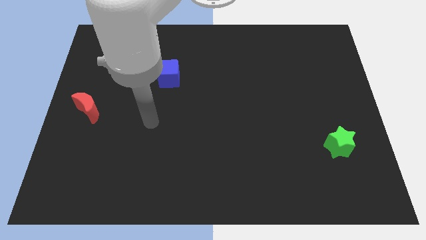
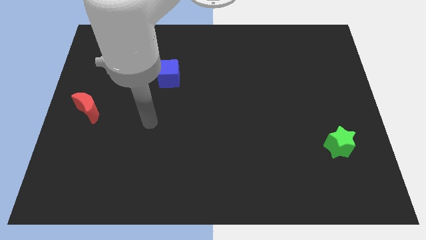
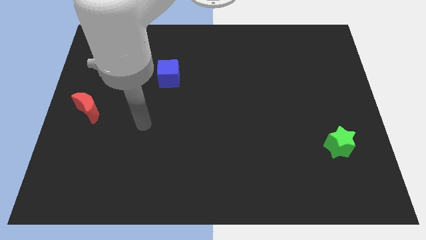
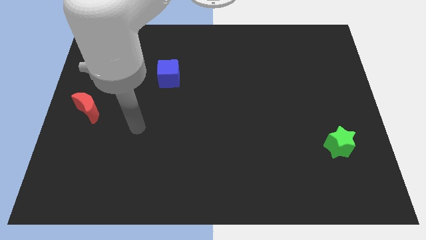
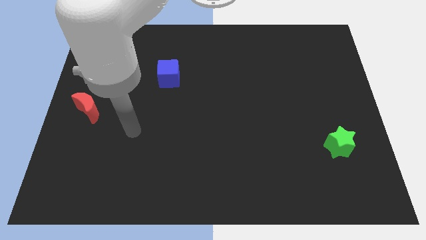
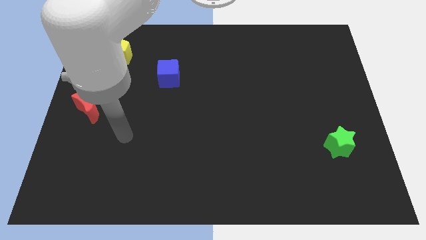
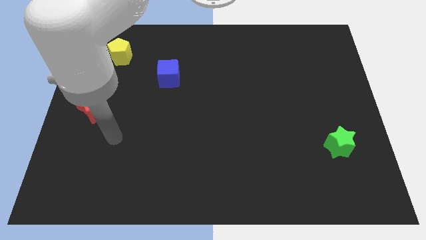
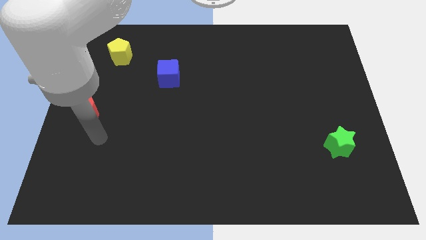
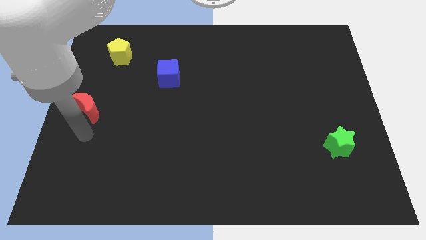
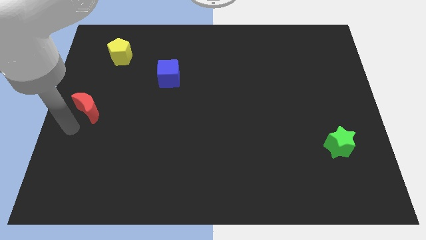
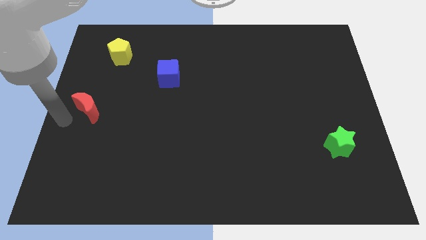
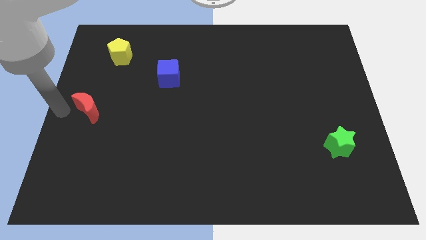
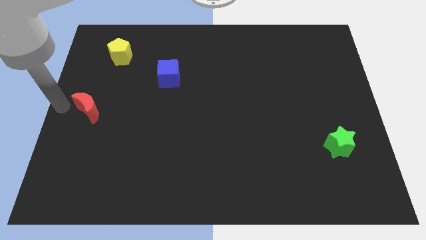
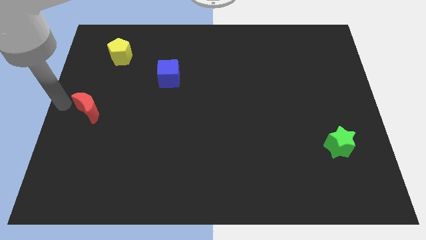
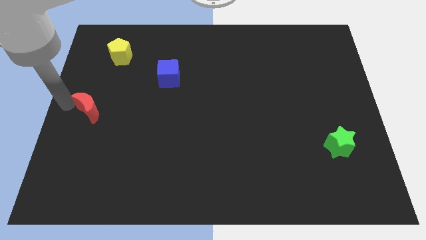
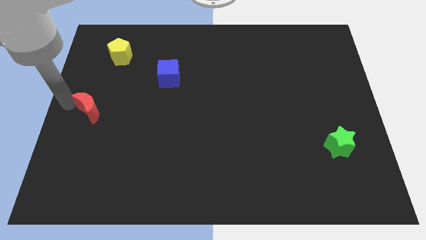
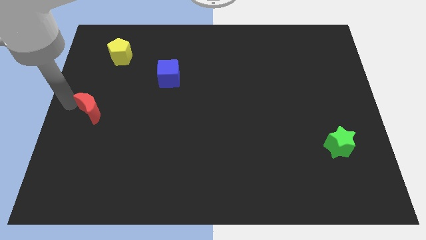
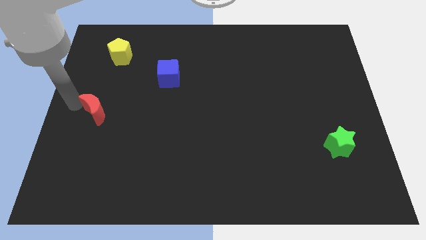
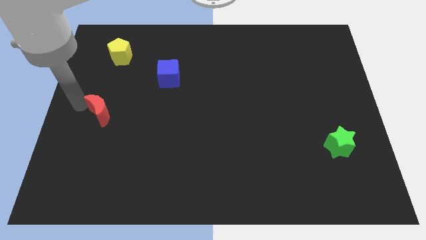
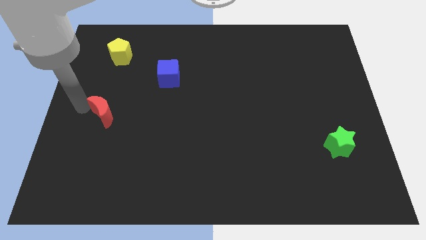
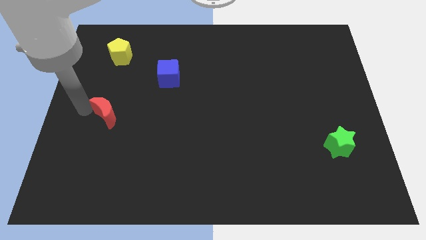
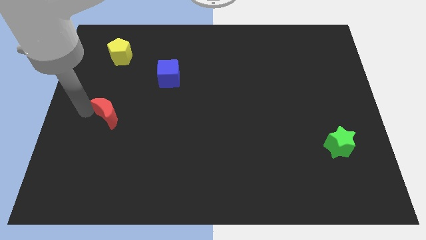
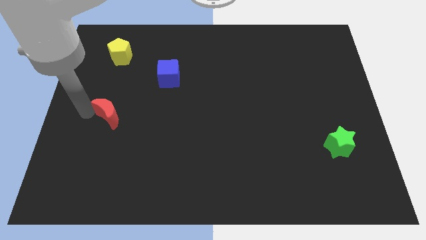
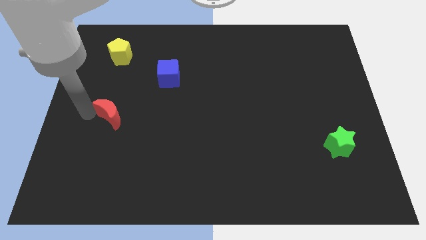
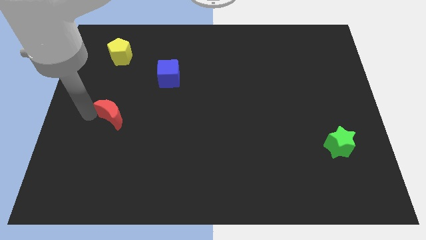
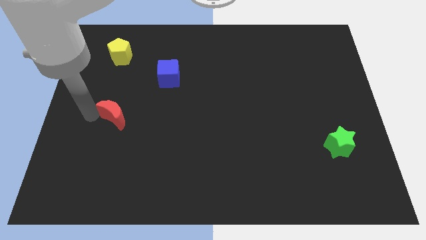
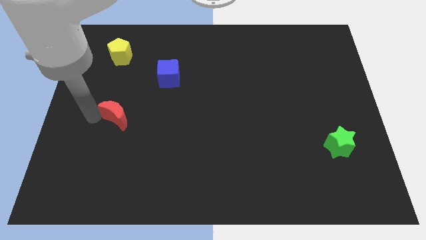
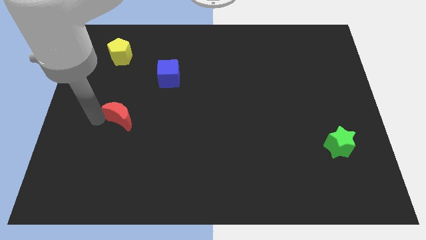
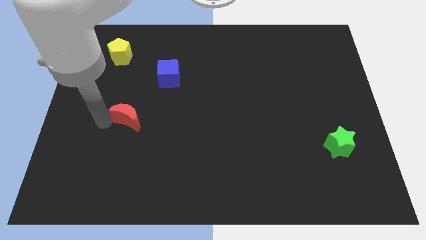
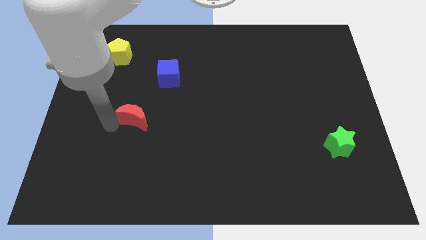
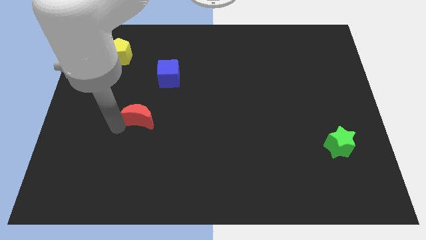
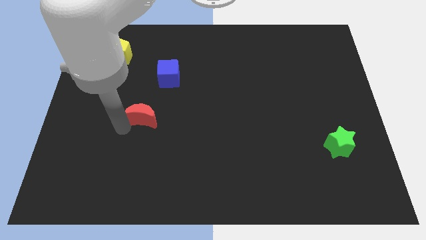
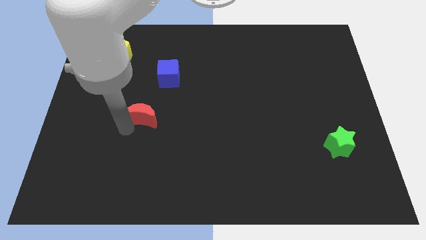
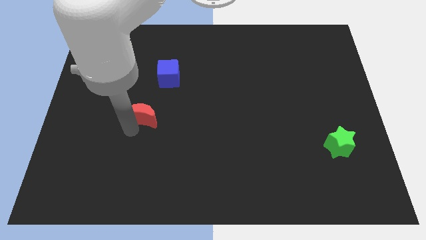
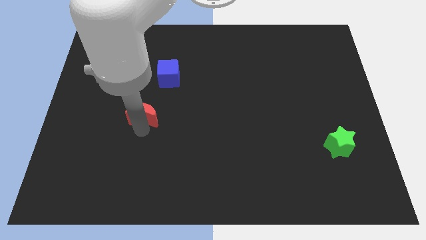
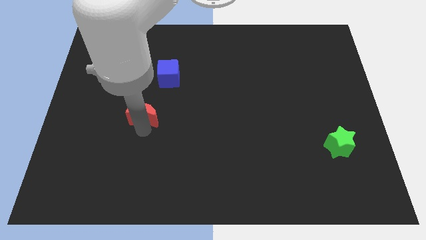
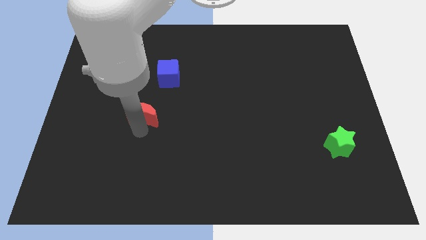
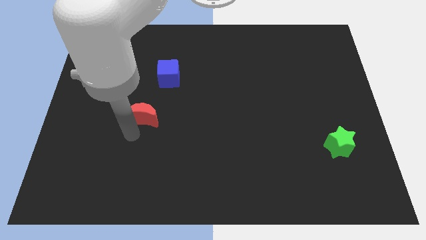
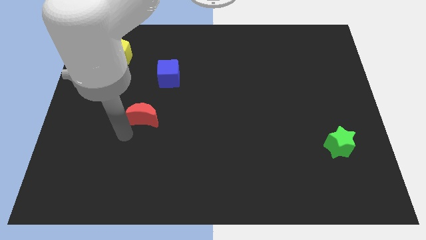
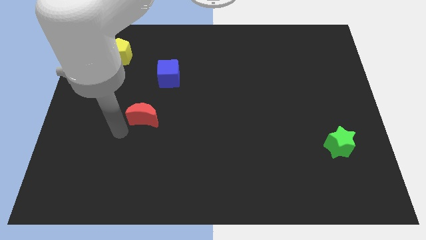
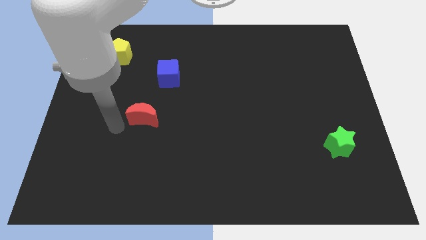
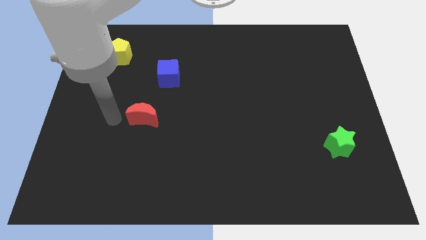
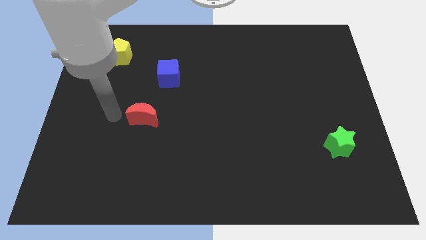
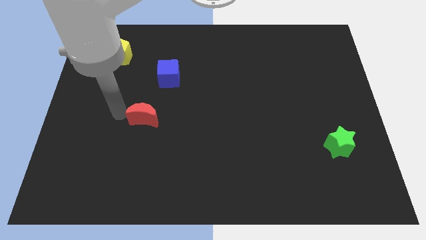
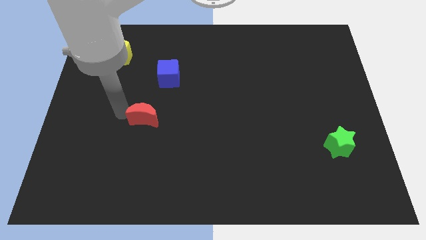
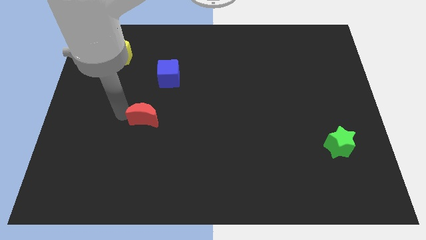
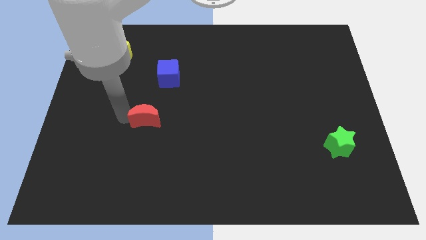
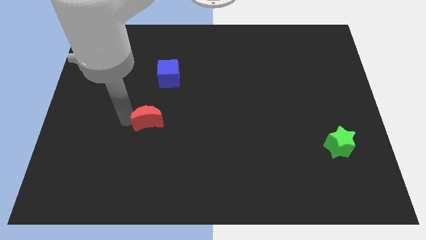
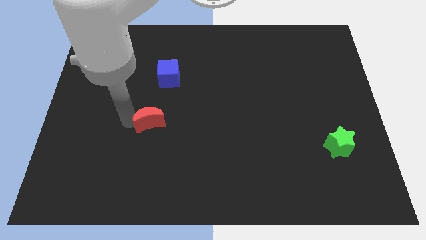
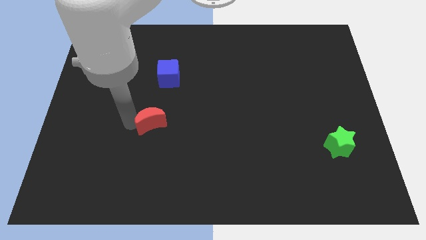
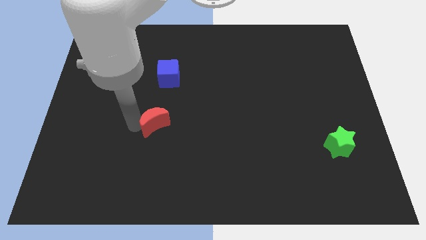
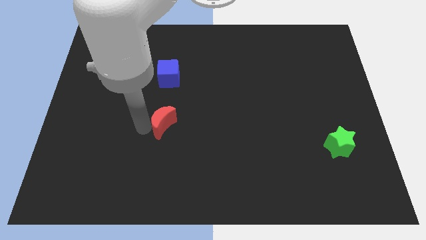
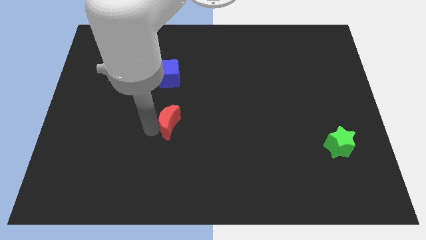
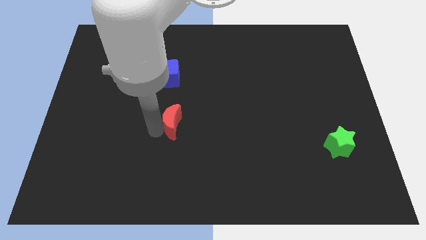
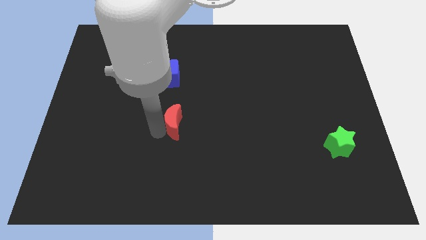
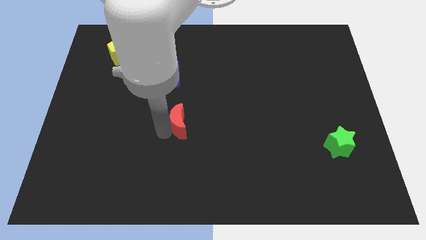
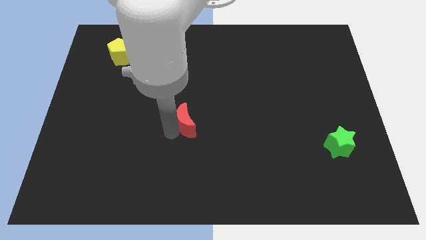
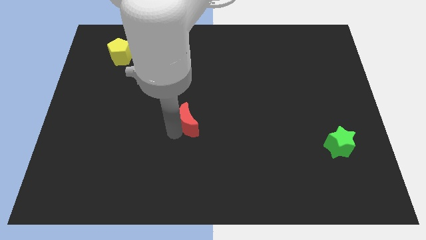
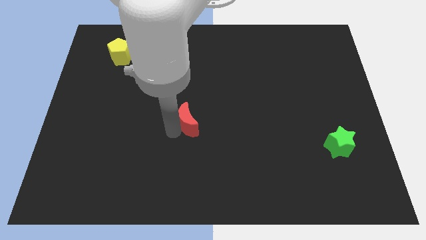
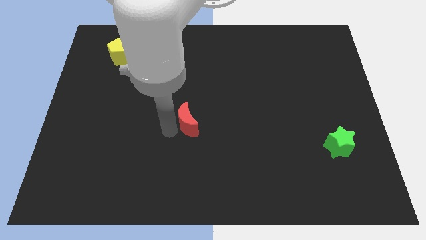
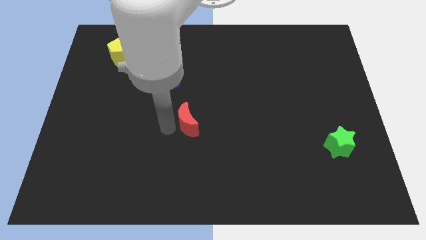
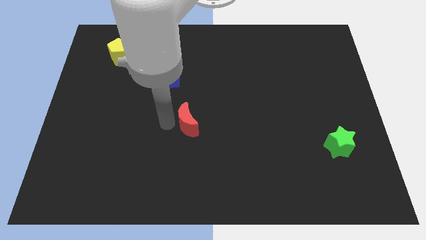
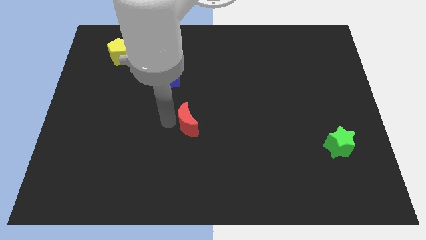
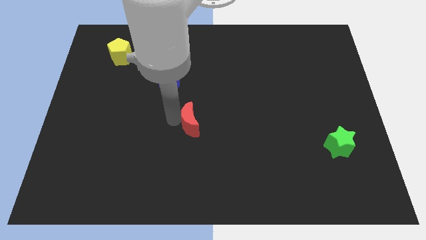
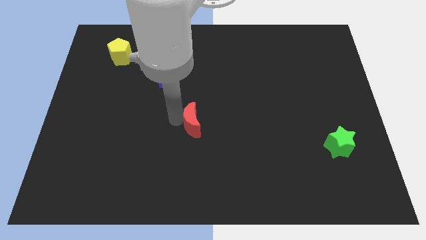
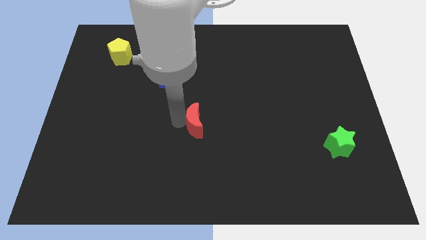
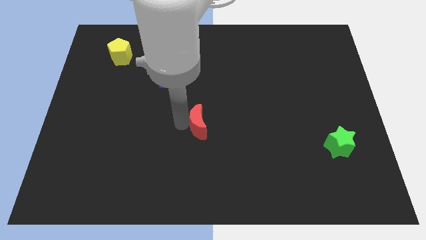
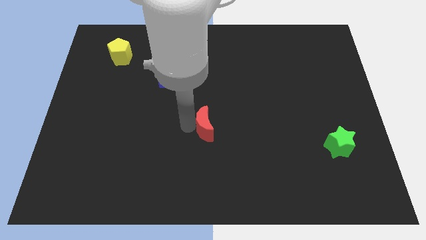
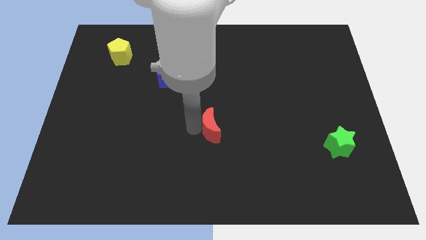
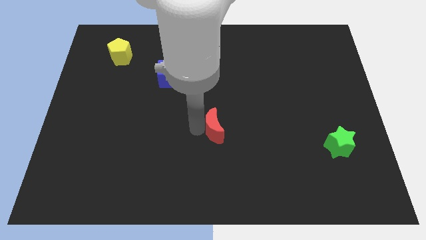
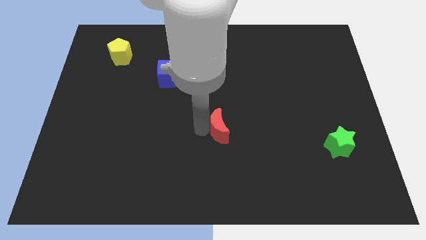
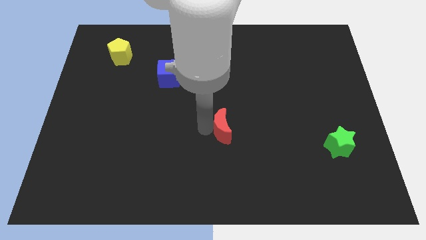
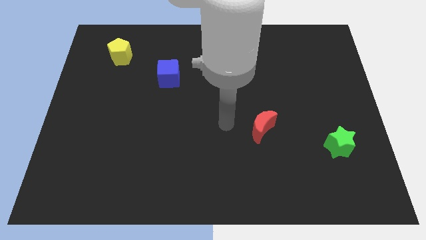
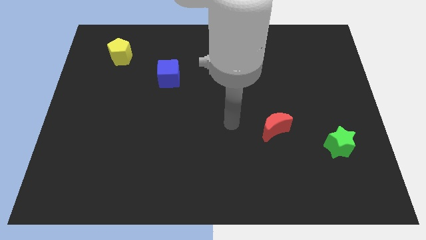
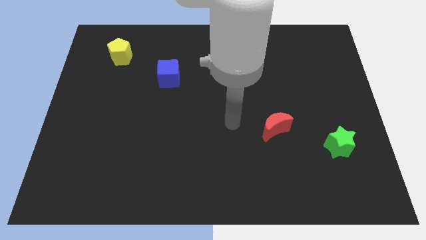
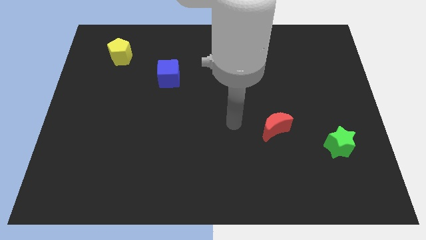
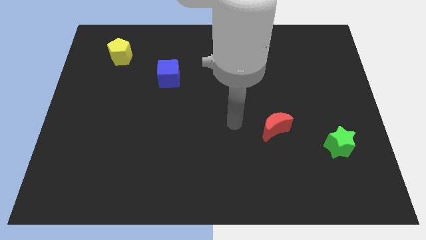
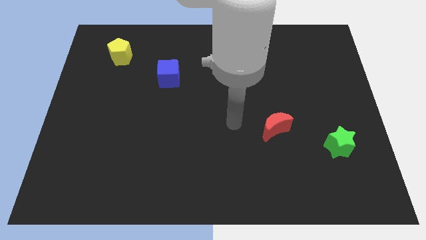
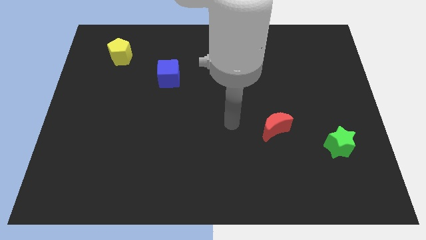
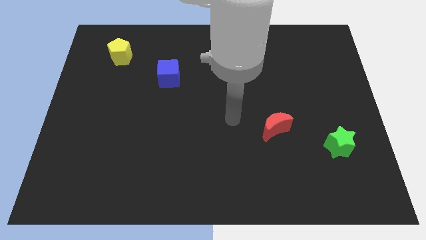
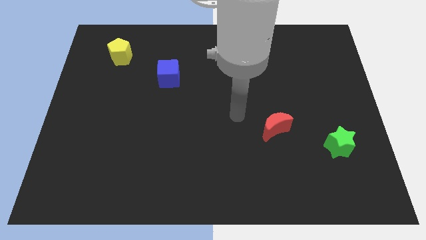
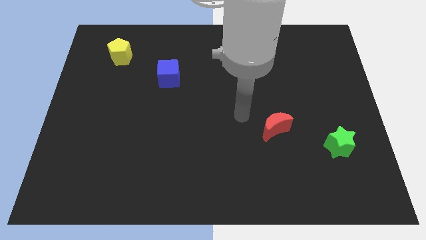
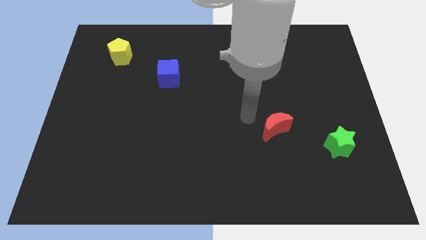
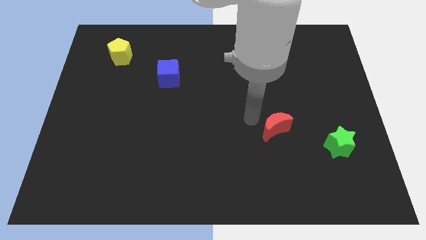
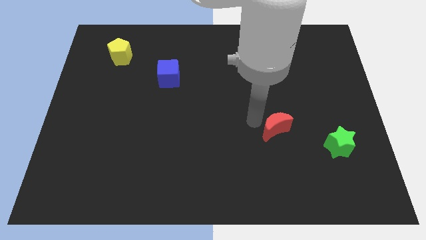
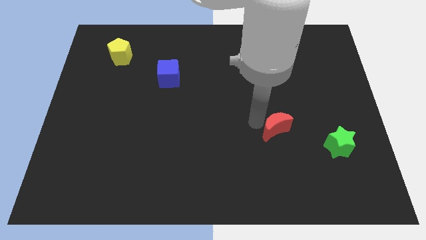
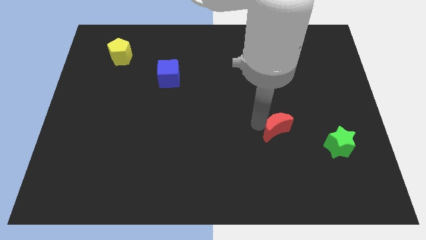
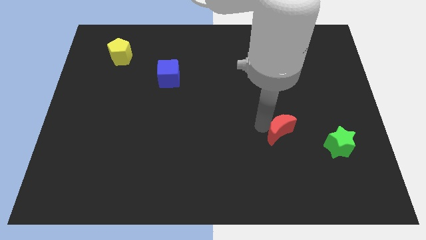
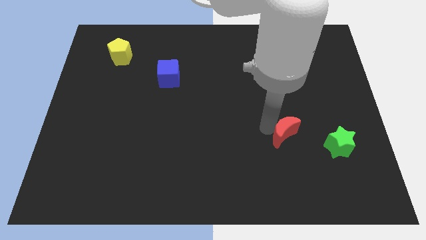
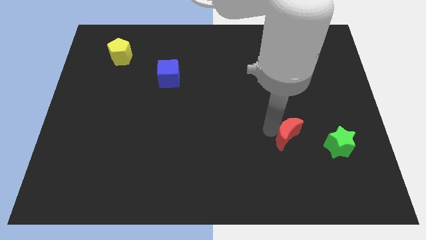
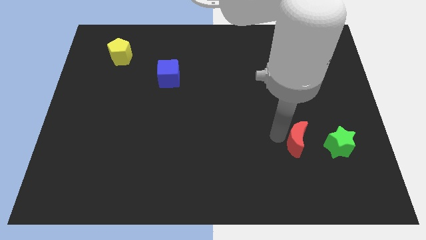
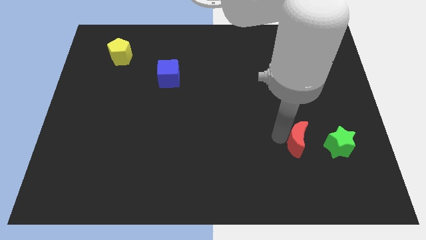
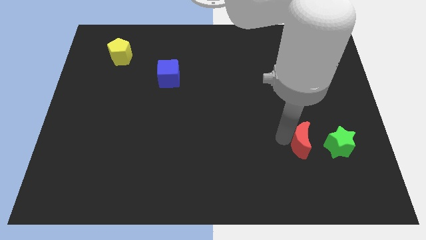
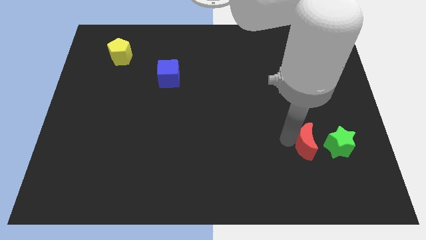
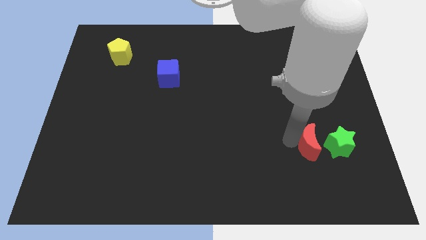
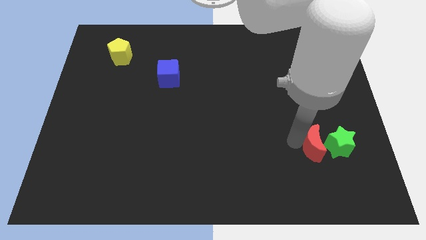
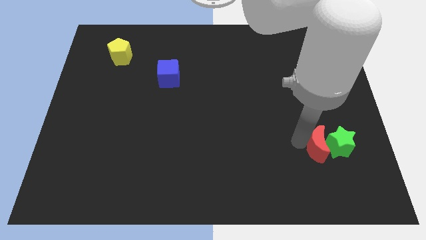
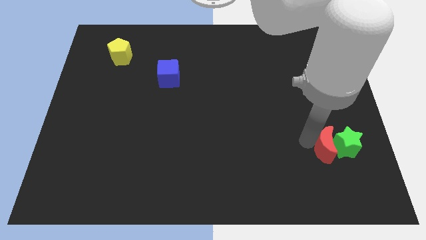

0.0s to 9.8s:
push the red moon towards the green block
